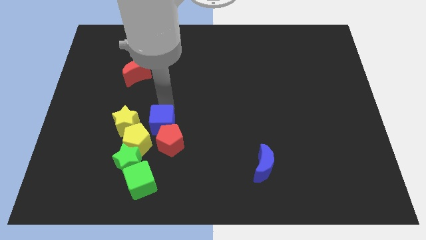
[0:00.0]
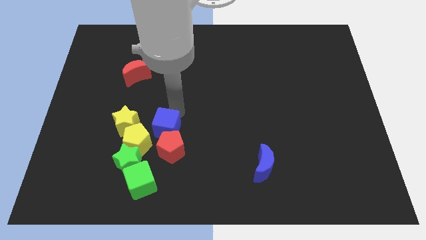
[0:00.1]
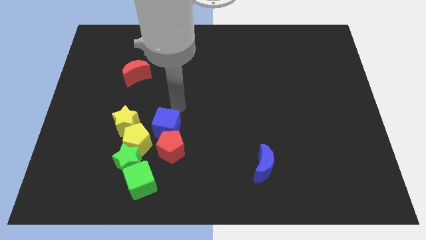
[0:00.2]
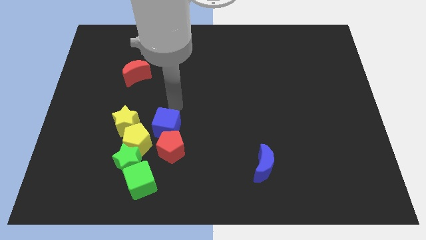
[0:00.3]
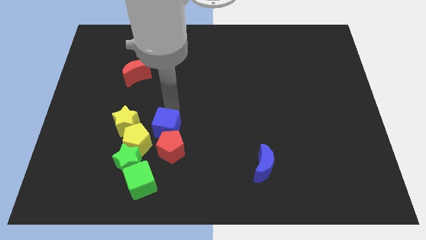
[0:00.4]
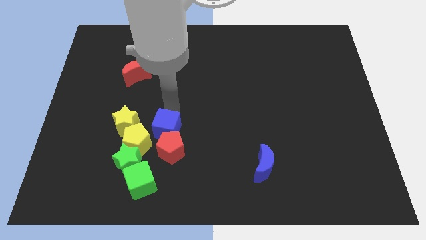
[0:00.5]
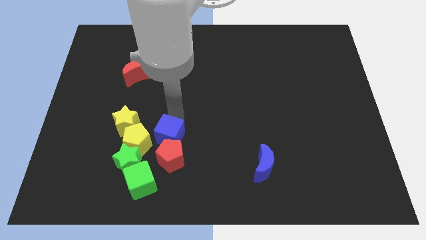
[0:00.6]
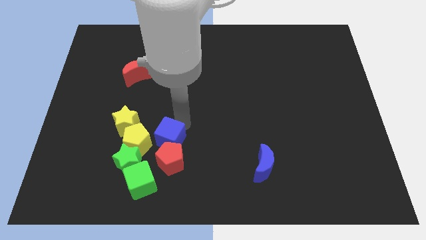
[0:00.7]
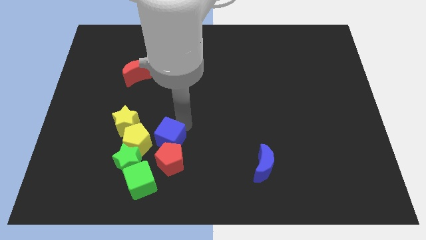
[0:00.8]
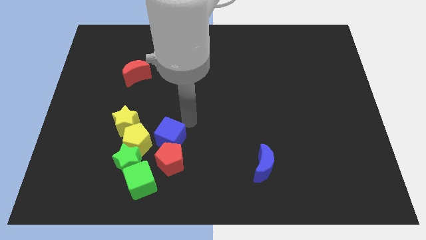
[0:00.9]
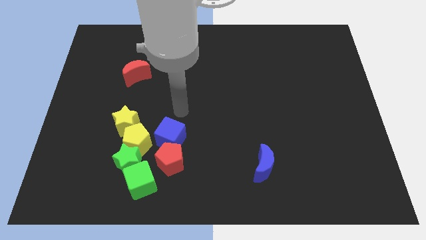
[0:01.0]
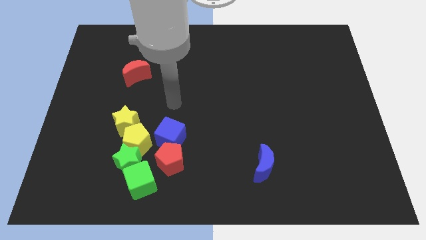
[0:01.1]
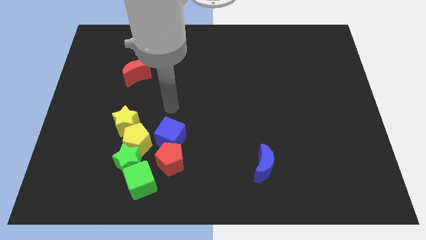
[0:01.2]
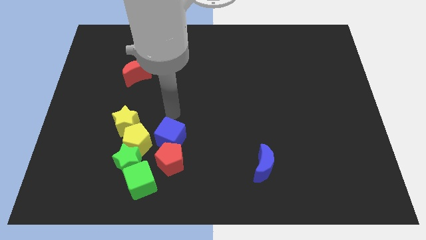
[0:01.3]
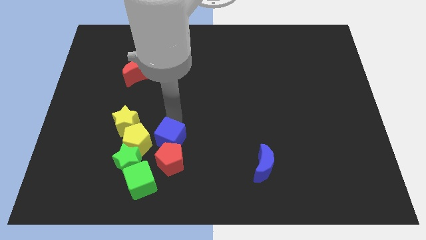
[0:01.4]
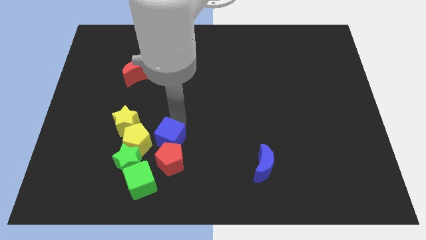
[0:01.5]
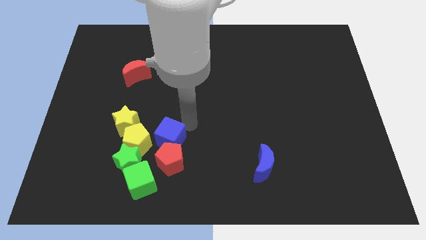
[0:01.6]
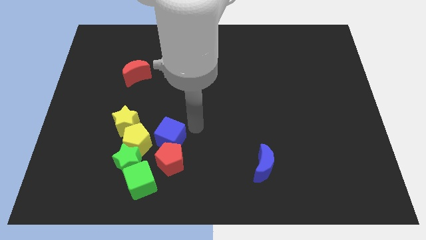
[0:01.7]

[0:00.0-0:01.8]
push the blue cube into the red pentagon

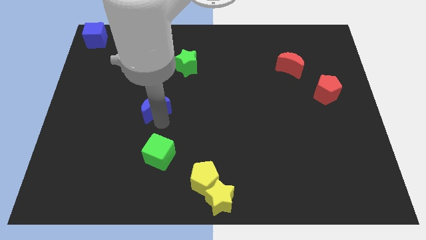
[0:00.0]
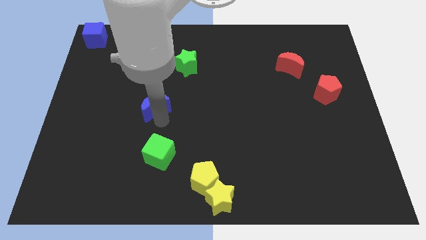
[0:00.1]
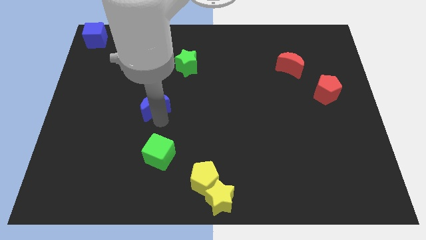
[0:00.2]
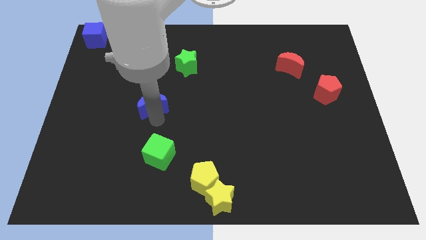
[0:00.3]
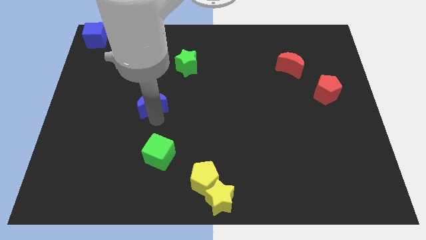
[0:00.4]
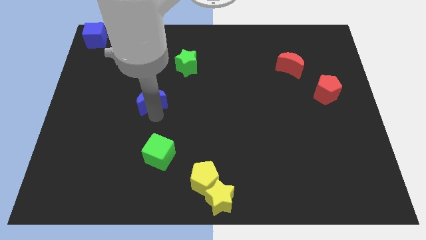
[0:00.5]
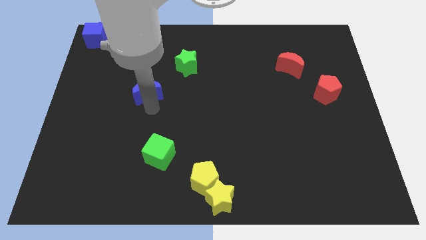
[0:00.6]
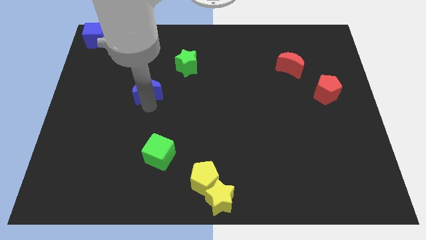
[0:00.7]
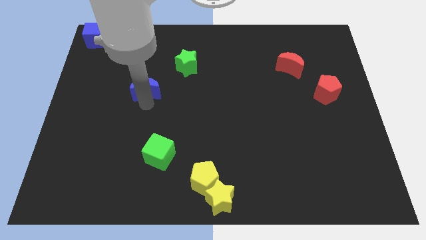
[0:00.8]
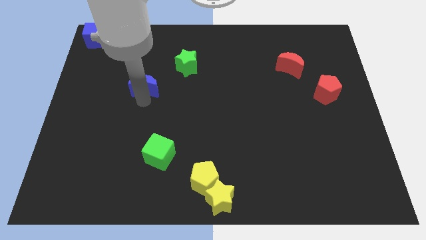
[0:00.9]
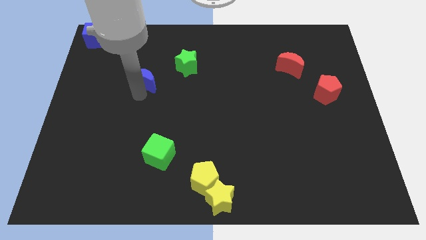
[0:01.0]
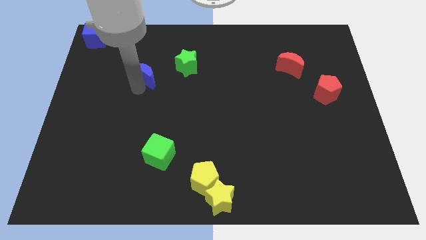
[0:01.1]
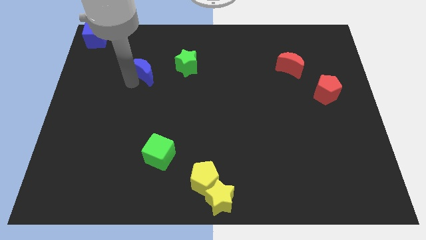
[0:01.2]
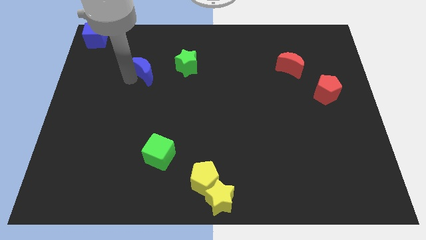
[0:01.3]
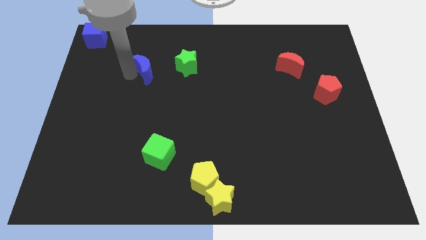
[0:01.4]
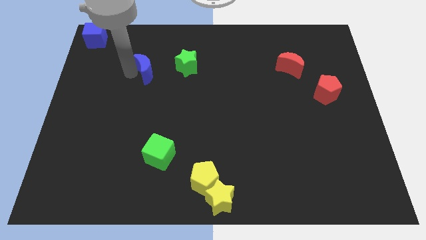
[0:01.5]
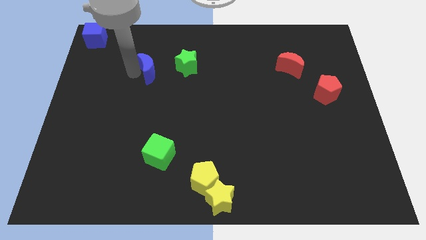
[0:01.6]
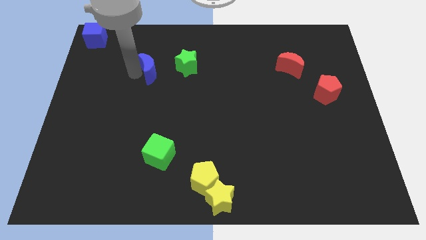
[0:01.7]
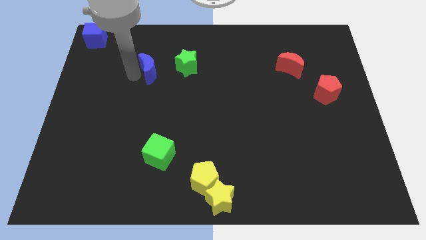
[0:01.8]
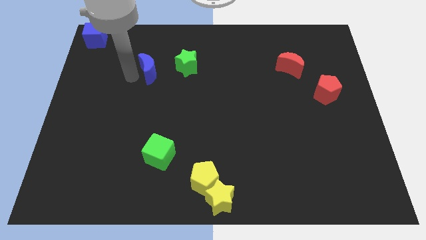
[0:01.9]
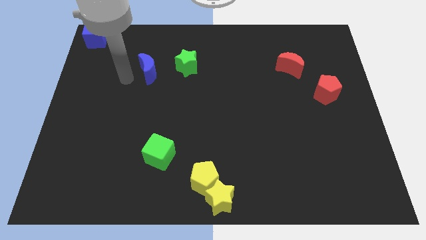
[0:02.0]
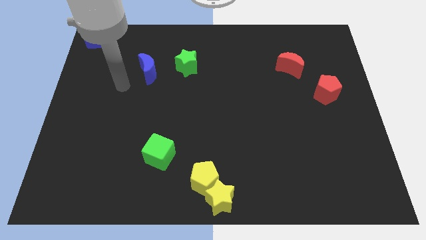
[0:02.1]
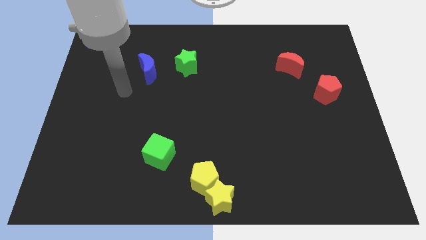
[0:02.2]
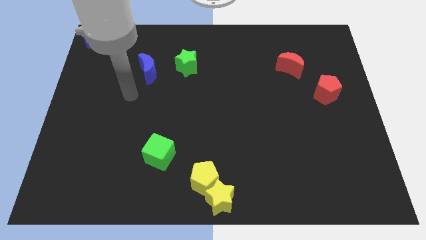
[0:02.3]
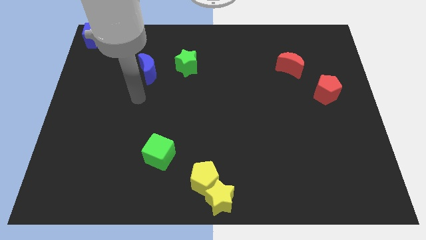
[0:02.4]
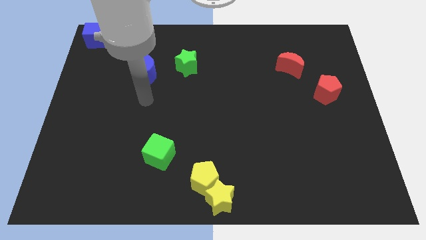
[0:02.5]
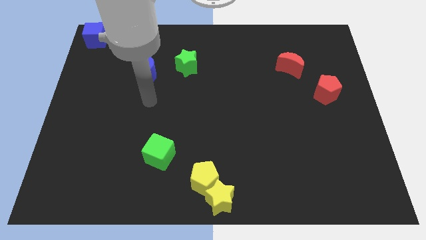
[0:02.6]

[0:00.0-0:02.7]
place the blue crescent horizontal to the left of the green star

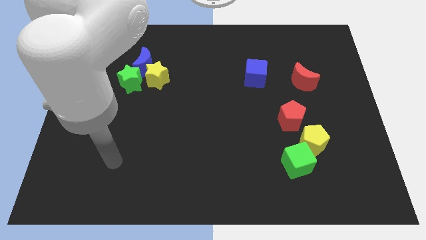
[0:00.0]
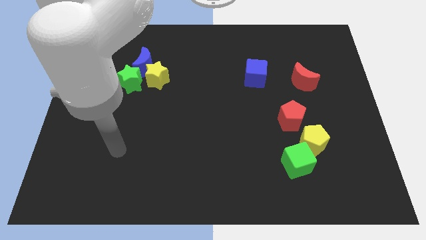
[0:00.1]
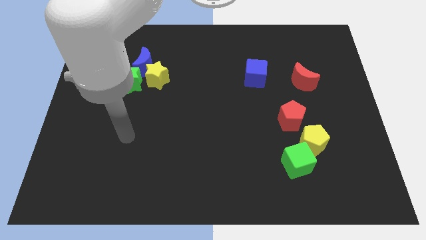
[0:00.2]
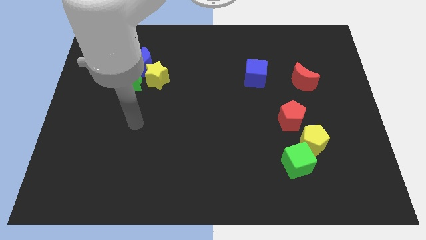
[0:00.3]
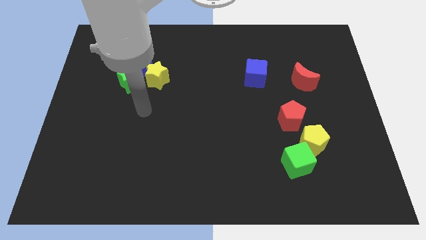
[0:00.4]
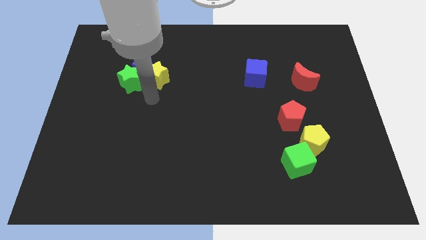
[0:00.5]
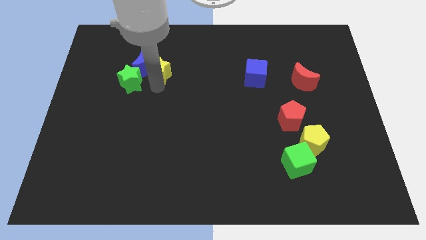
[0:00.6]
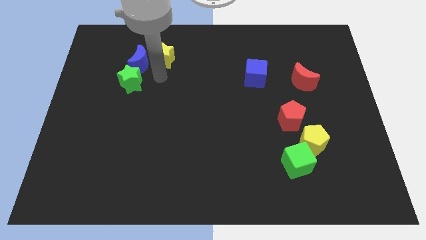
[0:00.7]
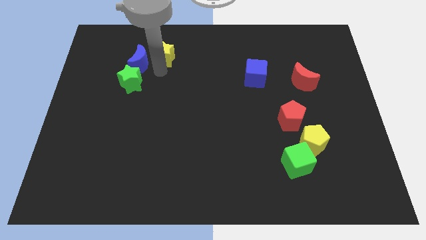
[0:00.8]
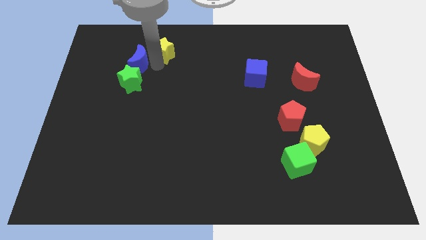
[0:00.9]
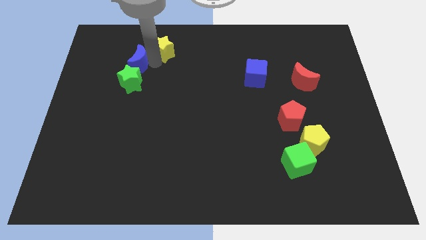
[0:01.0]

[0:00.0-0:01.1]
move yellow star towards the top of the board

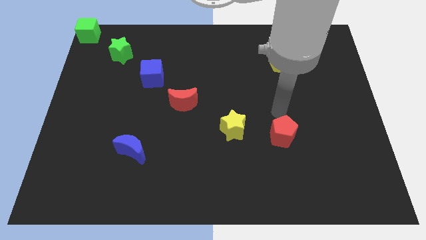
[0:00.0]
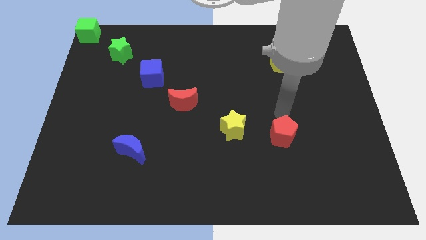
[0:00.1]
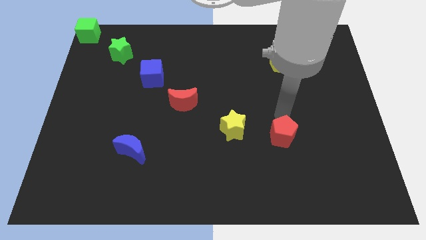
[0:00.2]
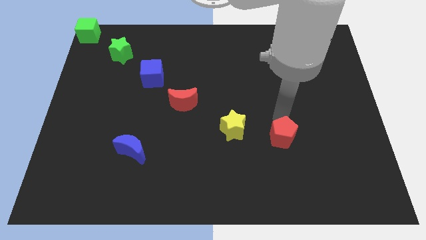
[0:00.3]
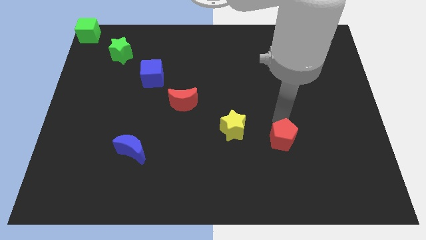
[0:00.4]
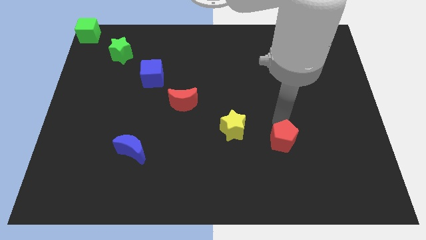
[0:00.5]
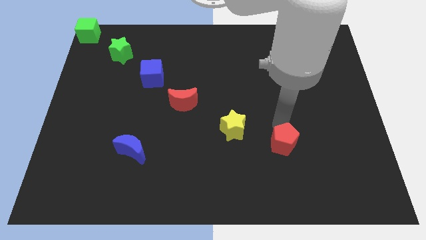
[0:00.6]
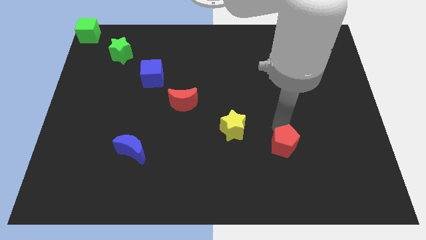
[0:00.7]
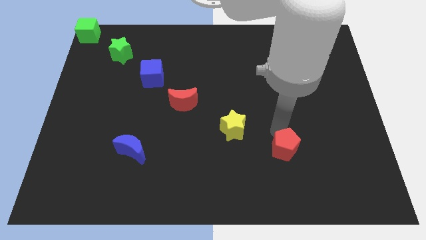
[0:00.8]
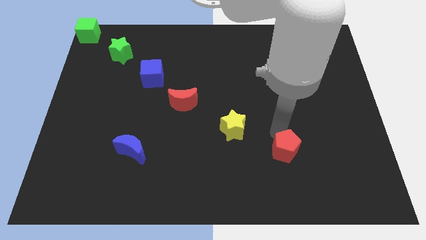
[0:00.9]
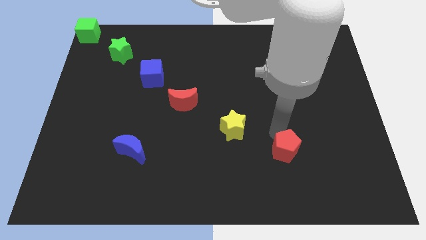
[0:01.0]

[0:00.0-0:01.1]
push the red pentagon downwards

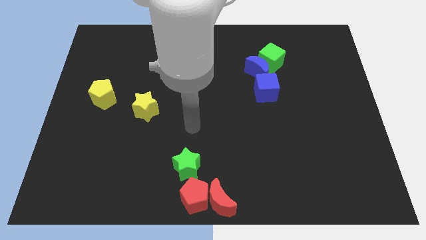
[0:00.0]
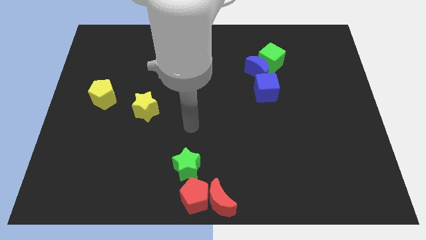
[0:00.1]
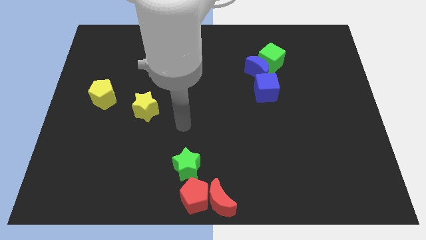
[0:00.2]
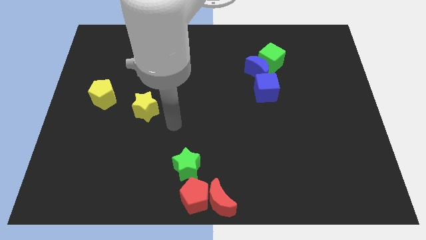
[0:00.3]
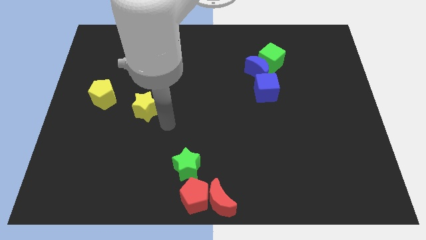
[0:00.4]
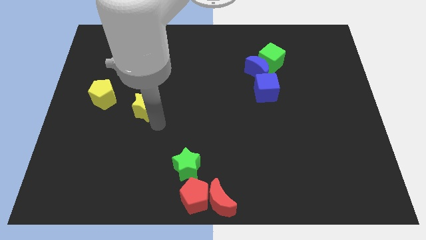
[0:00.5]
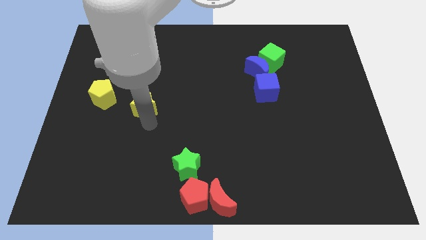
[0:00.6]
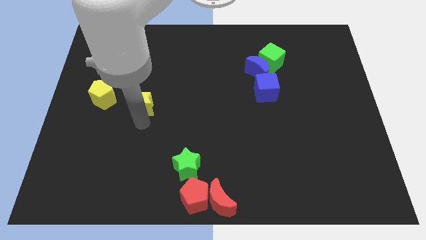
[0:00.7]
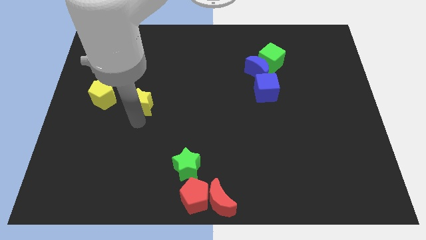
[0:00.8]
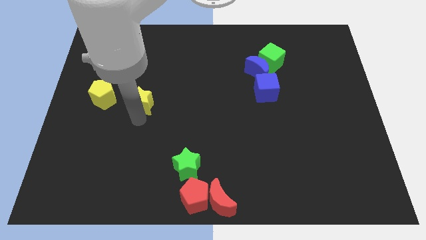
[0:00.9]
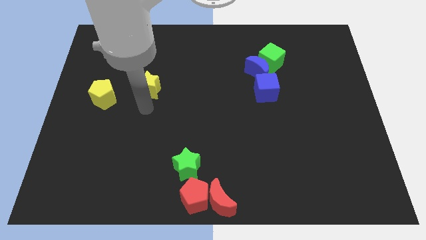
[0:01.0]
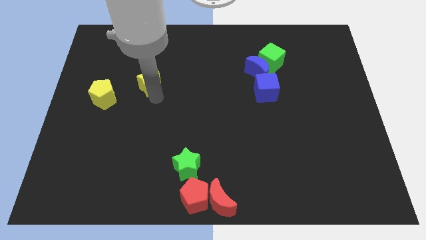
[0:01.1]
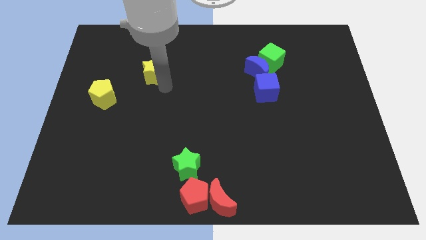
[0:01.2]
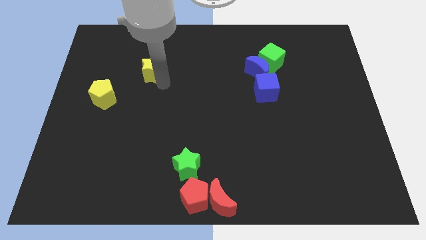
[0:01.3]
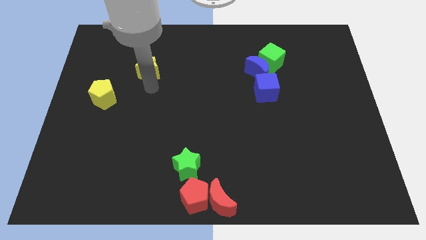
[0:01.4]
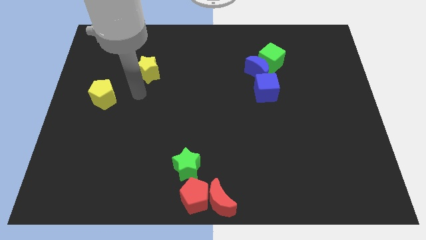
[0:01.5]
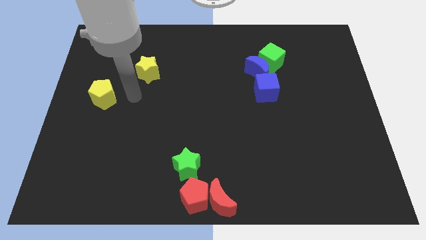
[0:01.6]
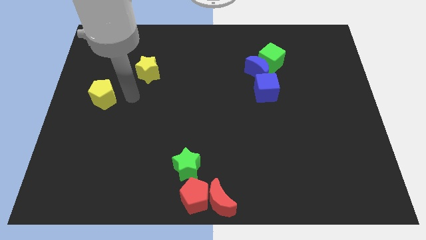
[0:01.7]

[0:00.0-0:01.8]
push the yellow star towards the top of the board

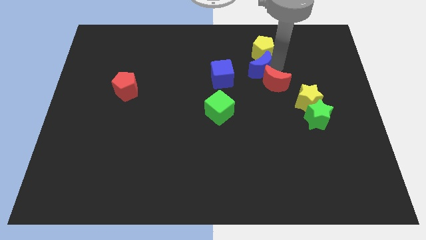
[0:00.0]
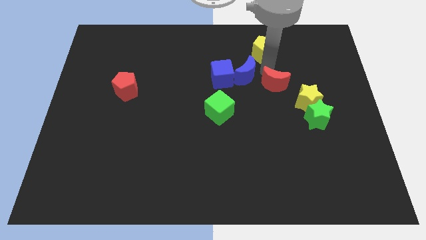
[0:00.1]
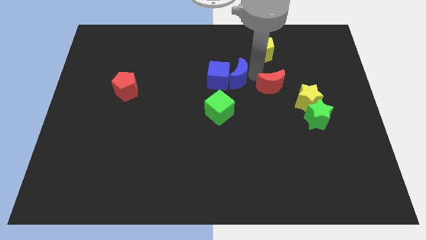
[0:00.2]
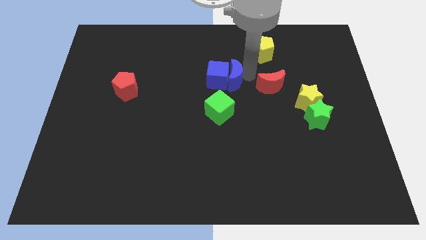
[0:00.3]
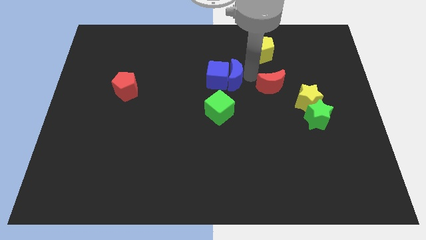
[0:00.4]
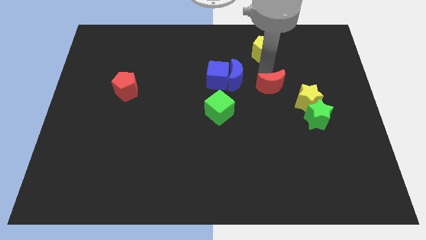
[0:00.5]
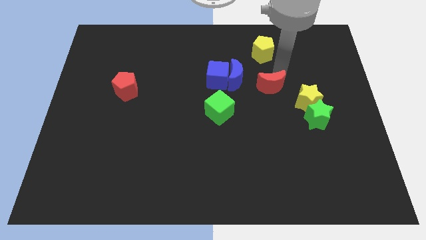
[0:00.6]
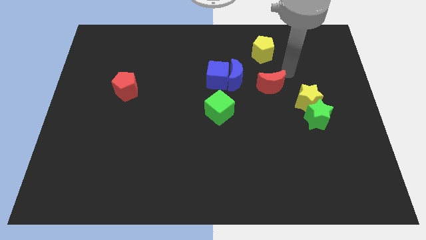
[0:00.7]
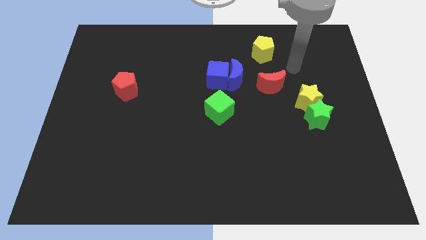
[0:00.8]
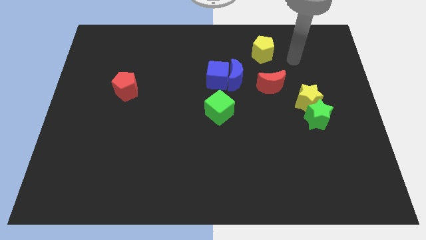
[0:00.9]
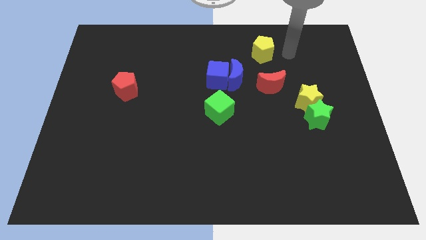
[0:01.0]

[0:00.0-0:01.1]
separate blue moon from yellow pentagon and red moon
